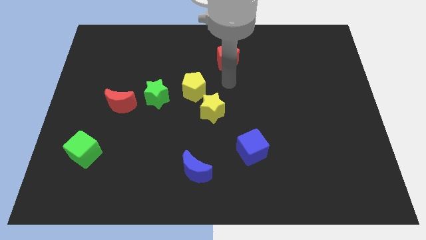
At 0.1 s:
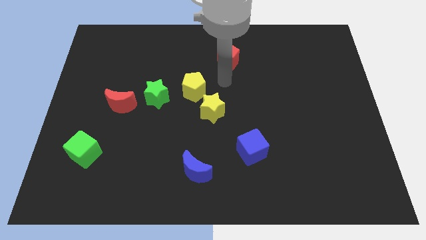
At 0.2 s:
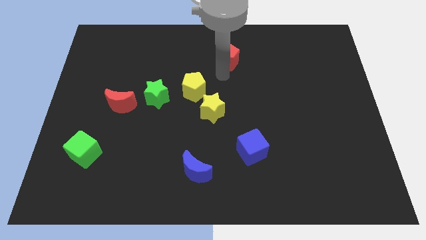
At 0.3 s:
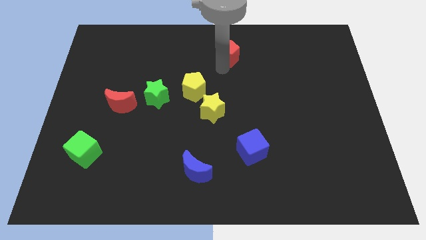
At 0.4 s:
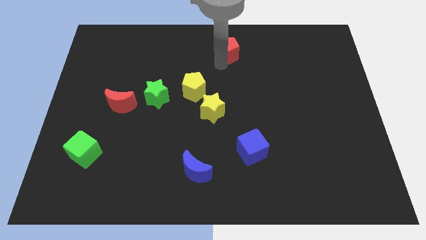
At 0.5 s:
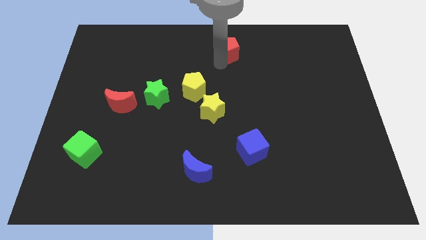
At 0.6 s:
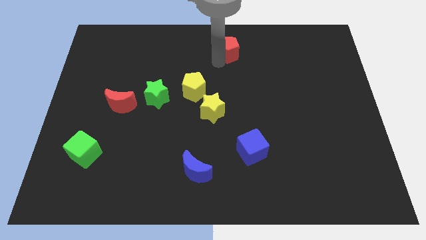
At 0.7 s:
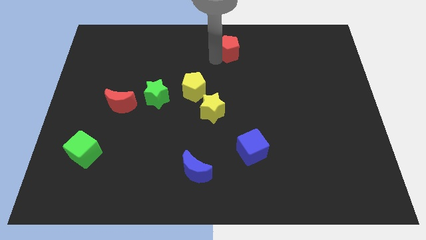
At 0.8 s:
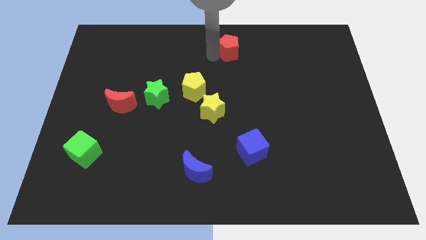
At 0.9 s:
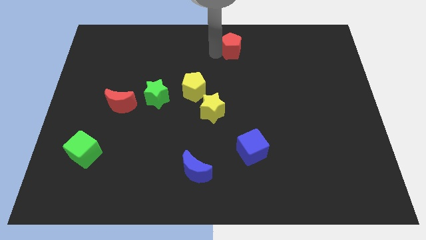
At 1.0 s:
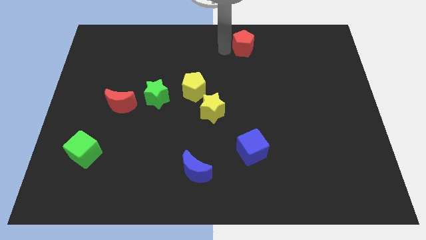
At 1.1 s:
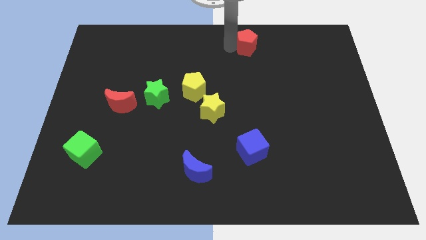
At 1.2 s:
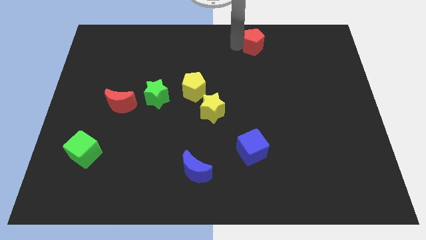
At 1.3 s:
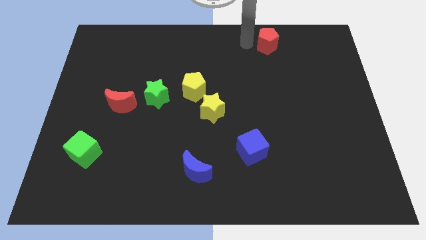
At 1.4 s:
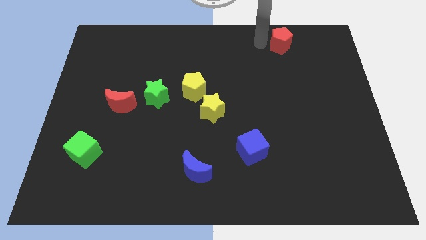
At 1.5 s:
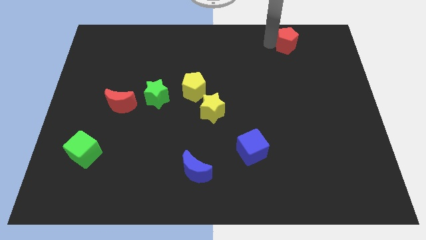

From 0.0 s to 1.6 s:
push the red pentagon towards the top right side of the board

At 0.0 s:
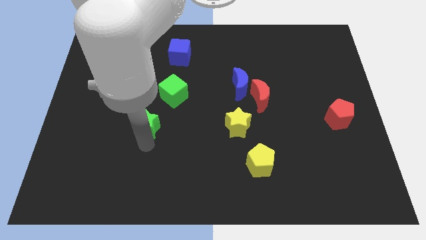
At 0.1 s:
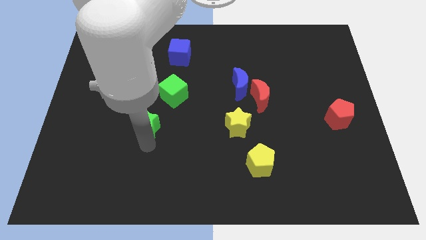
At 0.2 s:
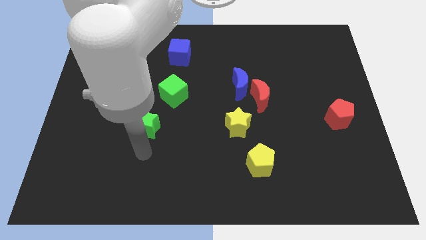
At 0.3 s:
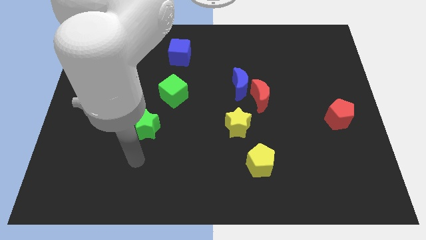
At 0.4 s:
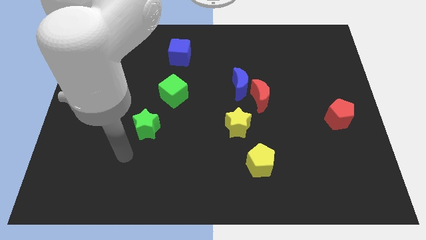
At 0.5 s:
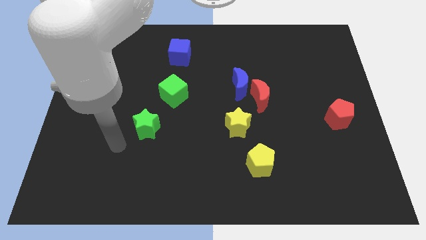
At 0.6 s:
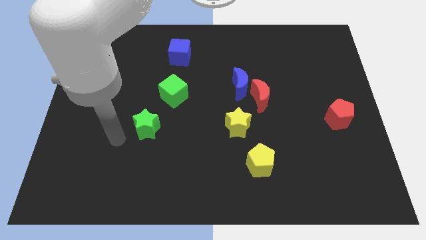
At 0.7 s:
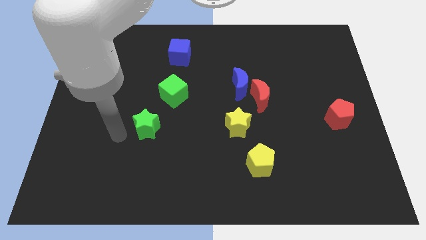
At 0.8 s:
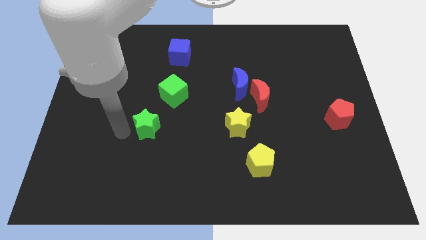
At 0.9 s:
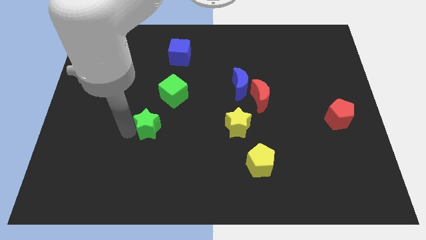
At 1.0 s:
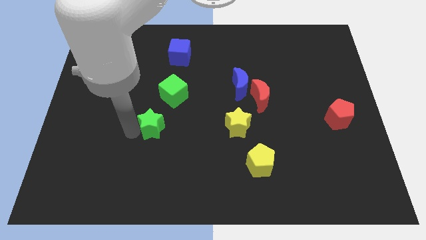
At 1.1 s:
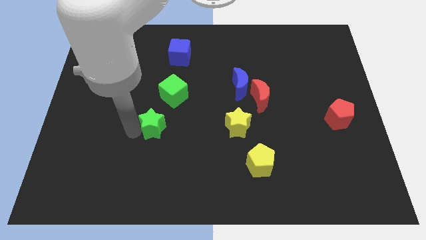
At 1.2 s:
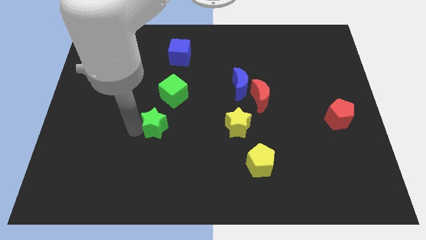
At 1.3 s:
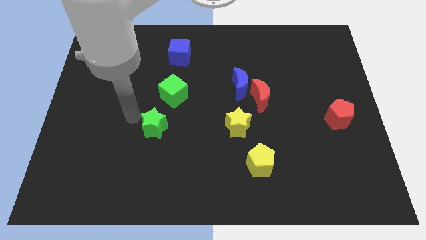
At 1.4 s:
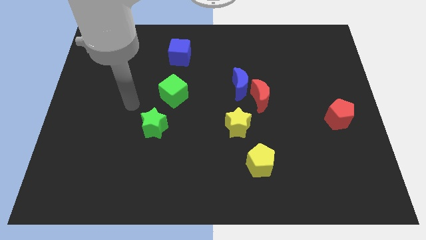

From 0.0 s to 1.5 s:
move the green star slightly to the right

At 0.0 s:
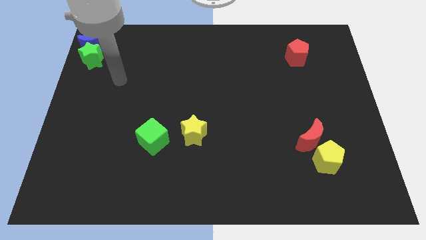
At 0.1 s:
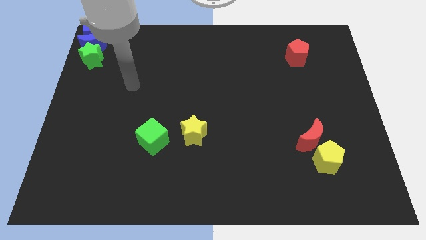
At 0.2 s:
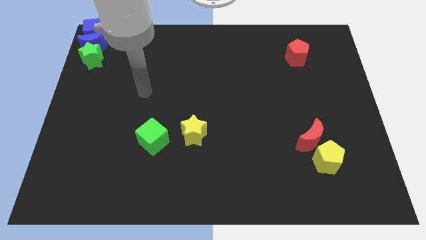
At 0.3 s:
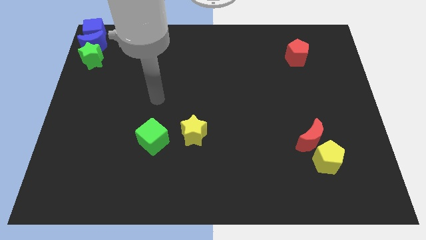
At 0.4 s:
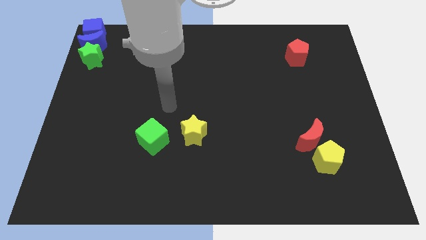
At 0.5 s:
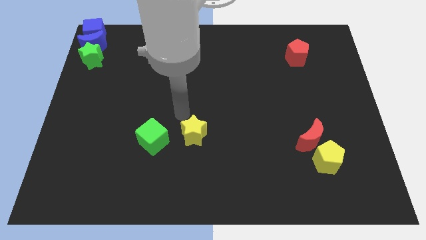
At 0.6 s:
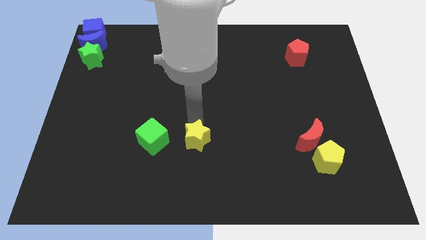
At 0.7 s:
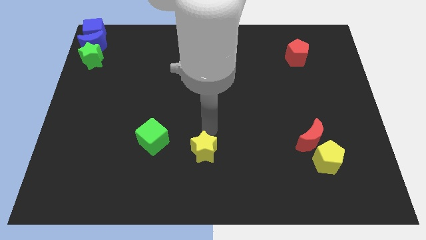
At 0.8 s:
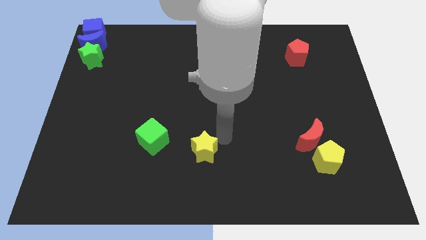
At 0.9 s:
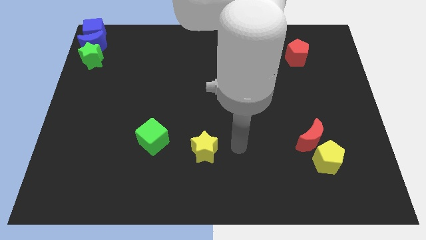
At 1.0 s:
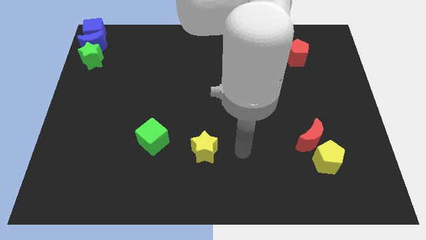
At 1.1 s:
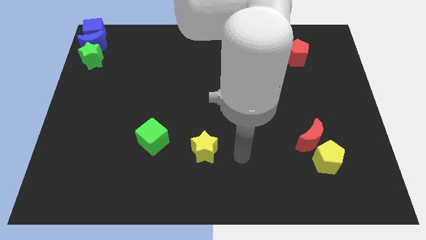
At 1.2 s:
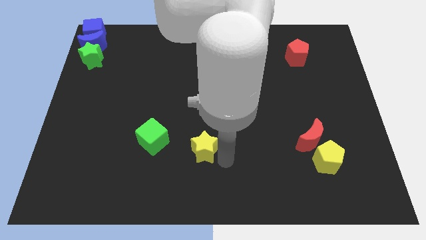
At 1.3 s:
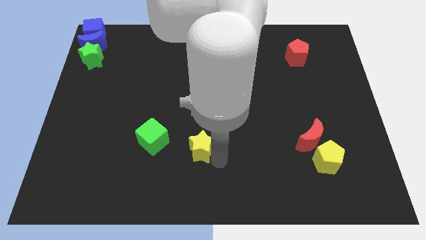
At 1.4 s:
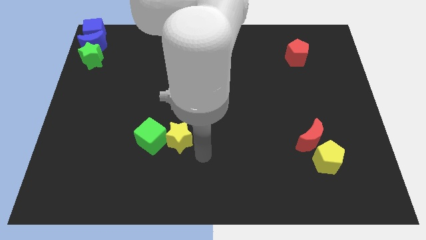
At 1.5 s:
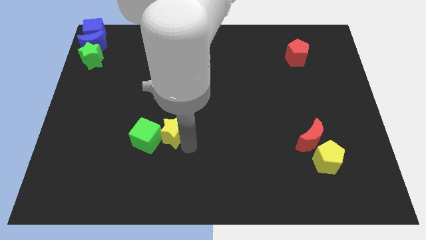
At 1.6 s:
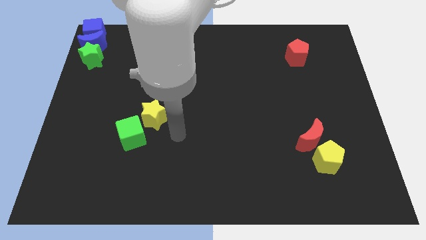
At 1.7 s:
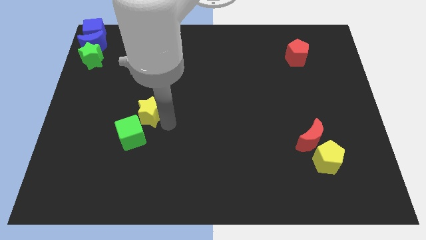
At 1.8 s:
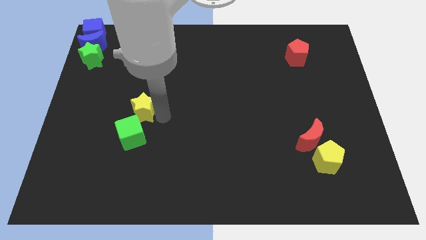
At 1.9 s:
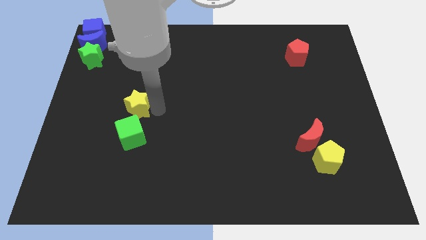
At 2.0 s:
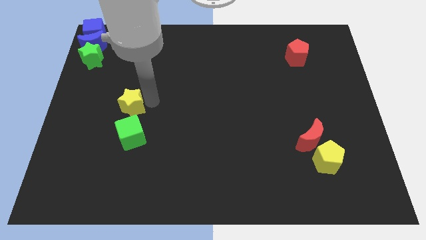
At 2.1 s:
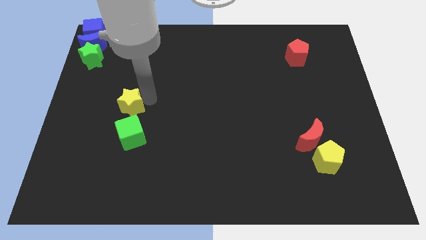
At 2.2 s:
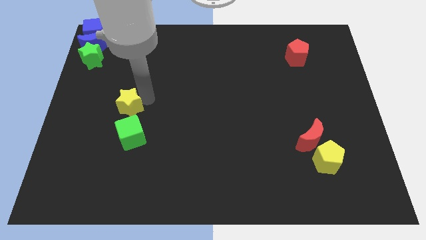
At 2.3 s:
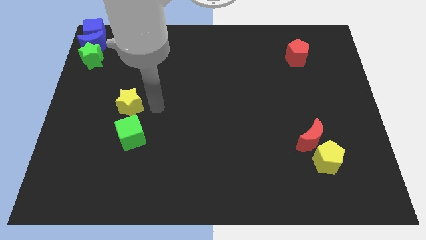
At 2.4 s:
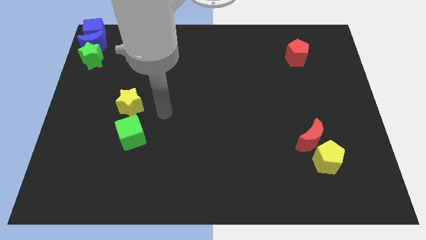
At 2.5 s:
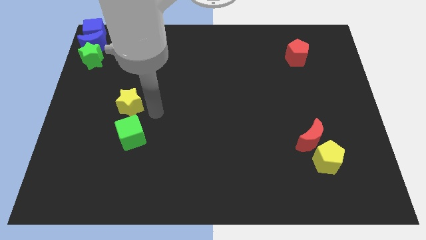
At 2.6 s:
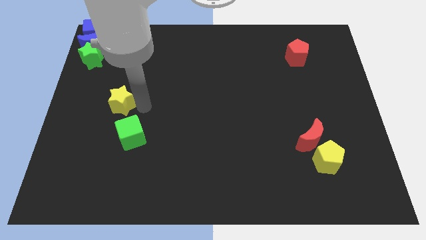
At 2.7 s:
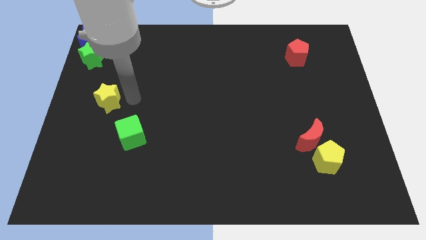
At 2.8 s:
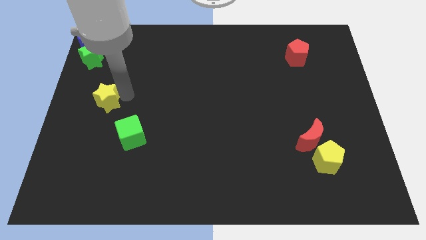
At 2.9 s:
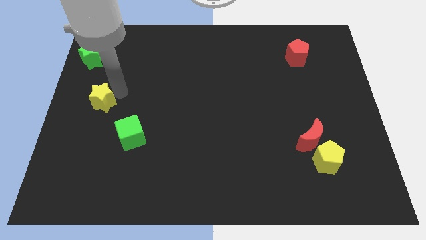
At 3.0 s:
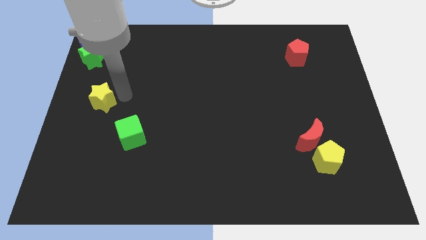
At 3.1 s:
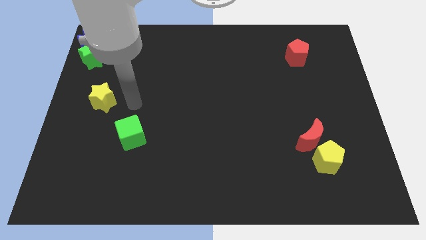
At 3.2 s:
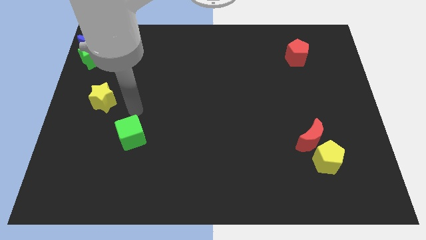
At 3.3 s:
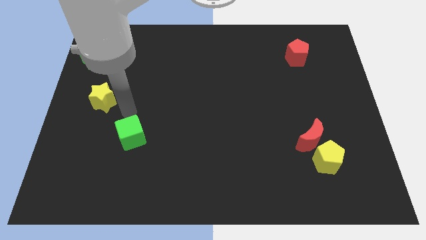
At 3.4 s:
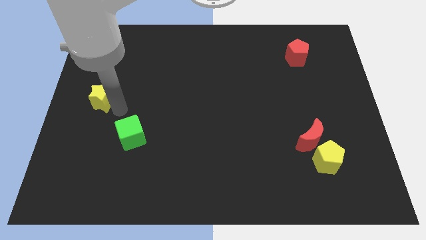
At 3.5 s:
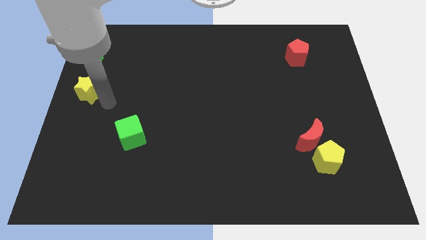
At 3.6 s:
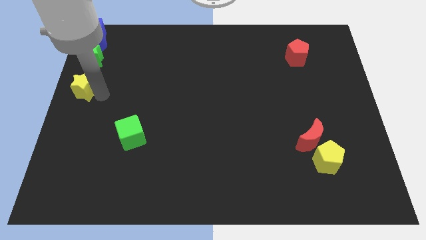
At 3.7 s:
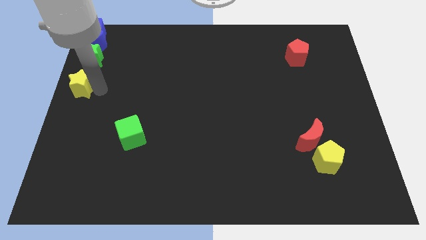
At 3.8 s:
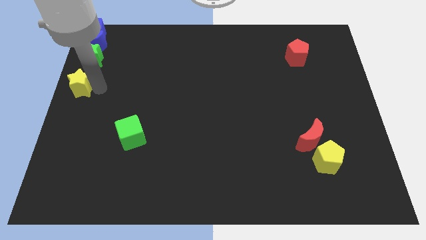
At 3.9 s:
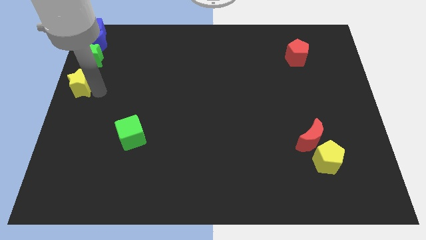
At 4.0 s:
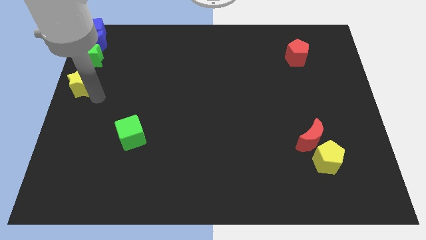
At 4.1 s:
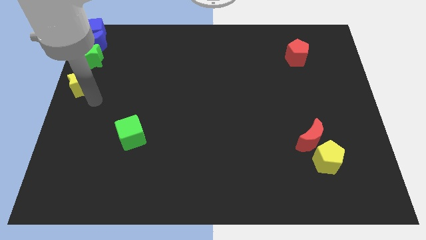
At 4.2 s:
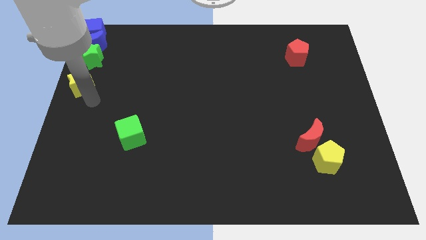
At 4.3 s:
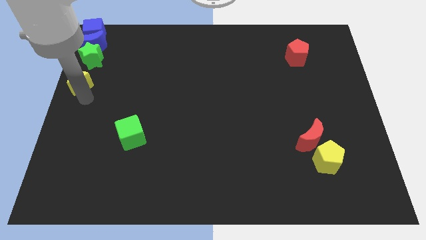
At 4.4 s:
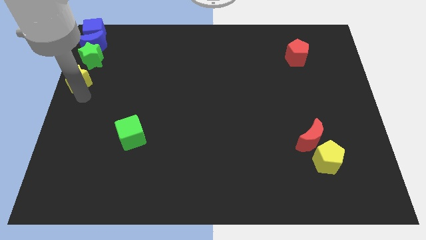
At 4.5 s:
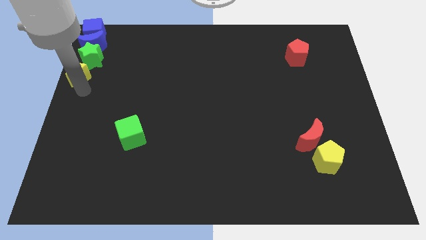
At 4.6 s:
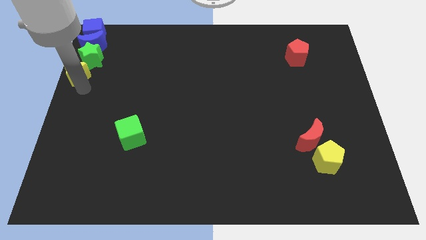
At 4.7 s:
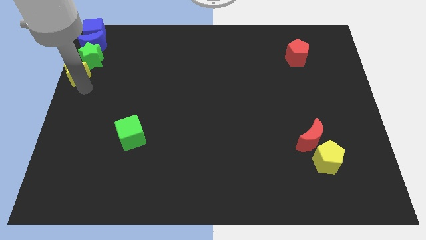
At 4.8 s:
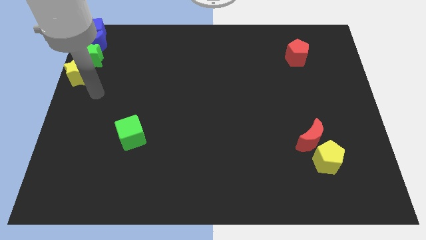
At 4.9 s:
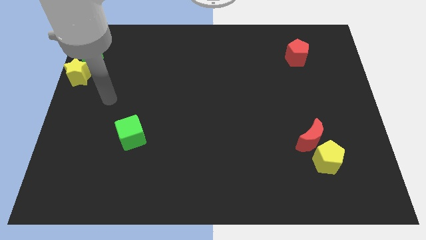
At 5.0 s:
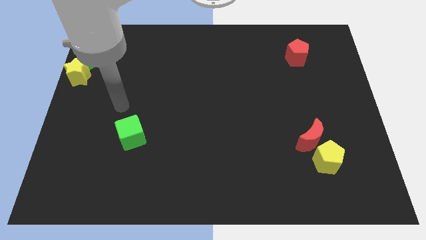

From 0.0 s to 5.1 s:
move the yellow star to the bottom side of the green star

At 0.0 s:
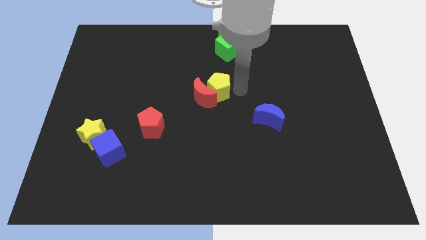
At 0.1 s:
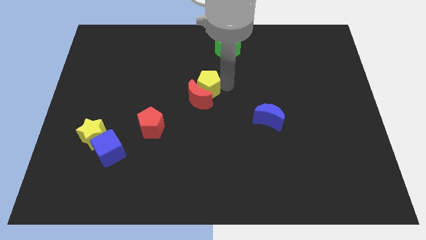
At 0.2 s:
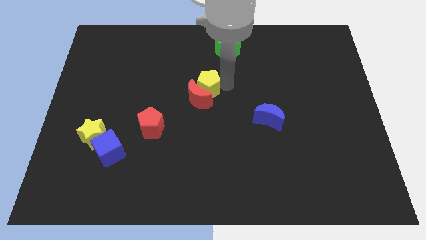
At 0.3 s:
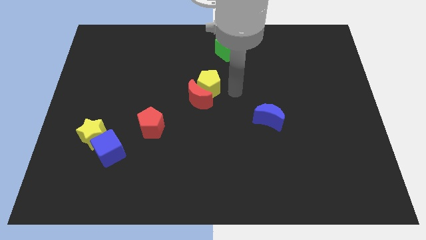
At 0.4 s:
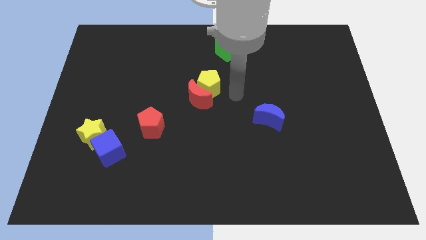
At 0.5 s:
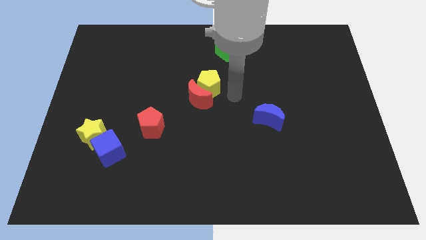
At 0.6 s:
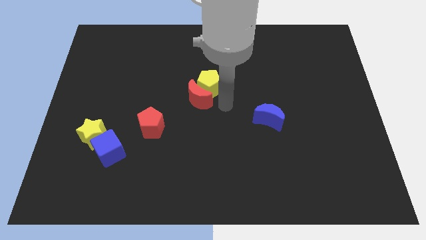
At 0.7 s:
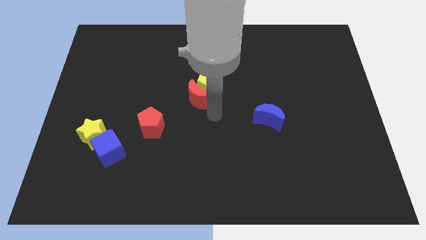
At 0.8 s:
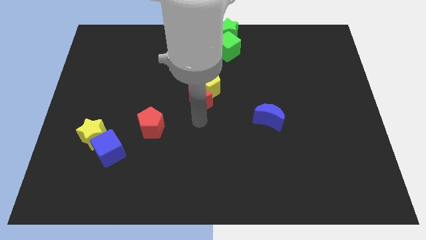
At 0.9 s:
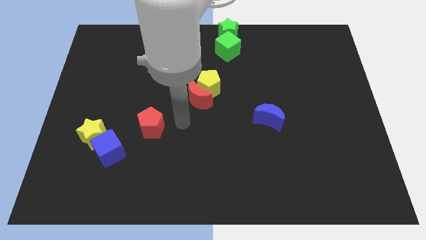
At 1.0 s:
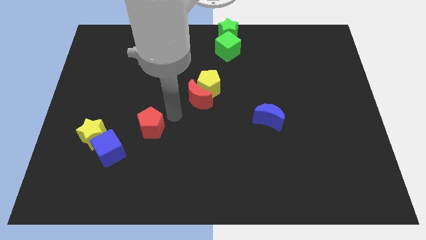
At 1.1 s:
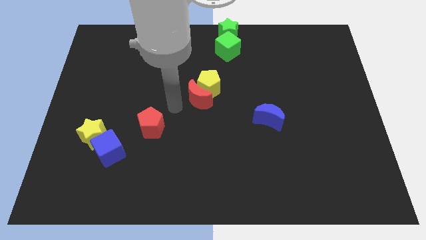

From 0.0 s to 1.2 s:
put arm in between red blocks
